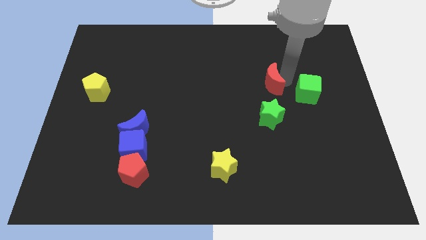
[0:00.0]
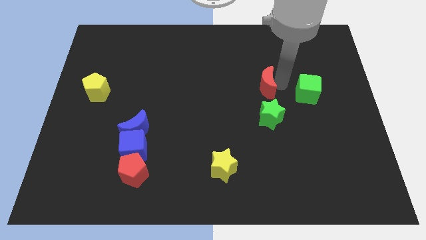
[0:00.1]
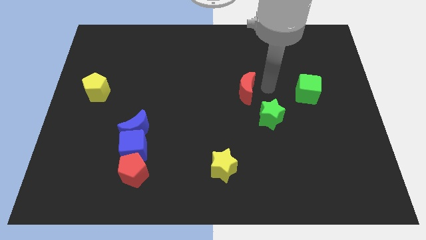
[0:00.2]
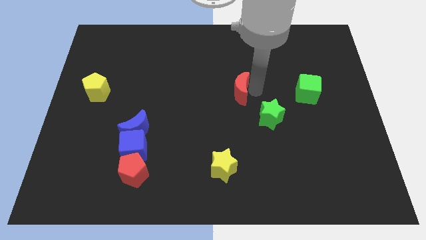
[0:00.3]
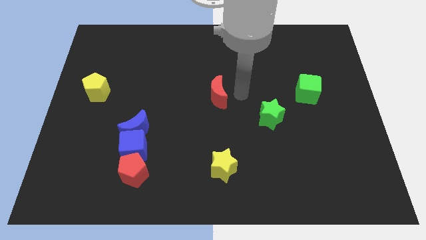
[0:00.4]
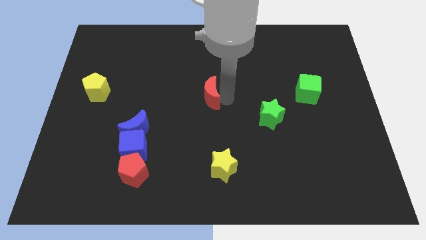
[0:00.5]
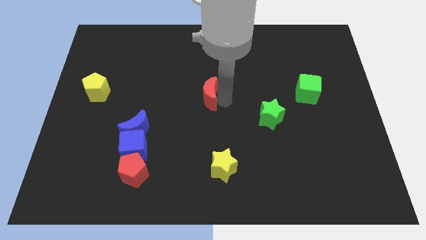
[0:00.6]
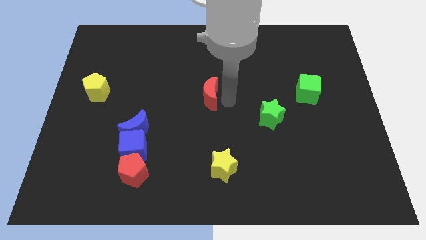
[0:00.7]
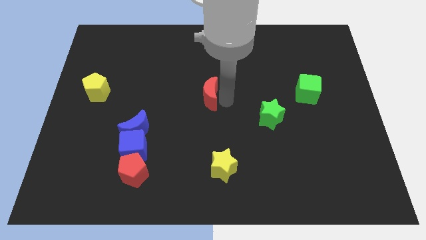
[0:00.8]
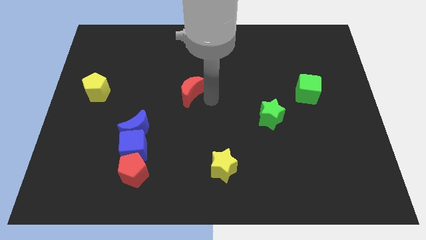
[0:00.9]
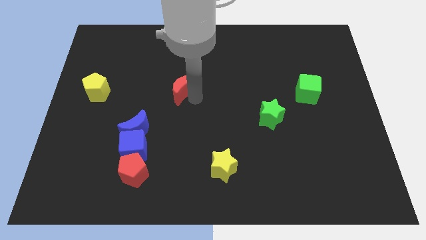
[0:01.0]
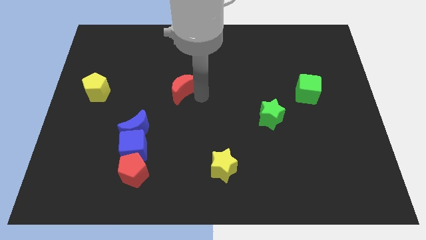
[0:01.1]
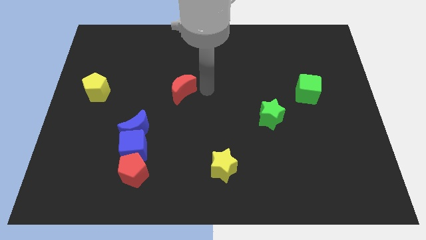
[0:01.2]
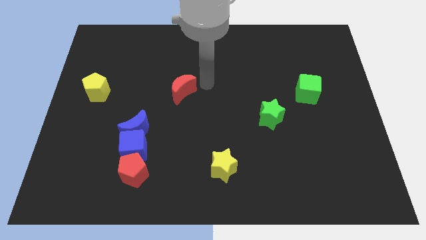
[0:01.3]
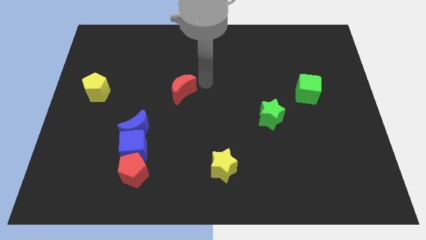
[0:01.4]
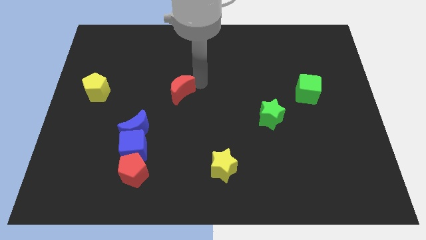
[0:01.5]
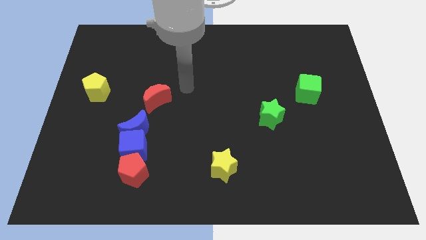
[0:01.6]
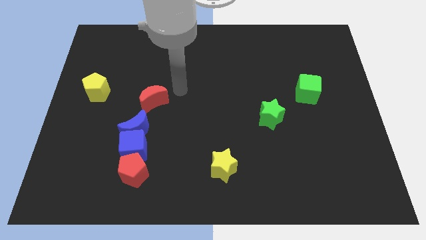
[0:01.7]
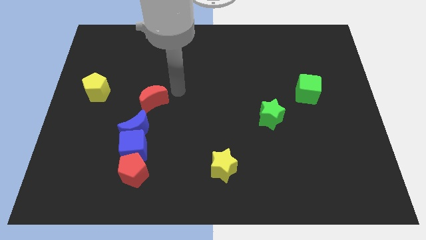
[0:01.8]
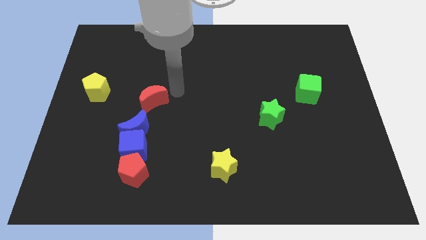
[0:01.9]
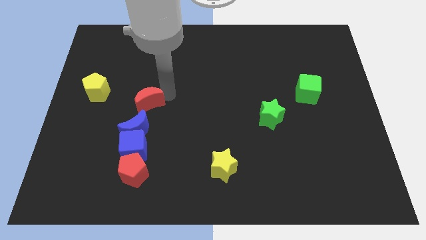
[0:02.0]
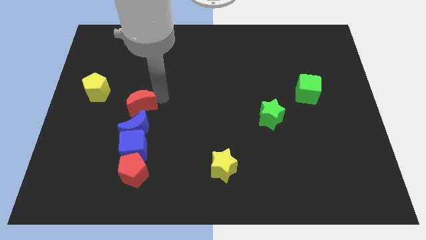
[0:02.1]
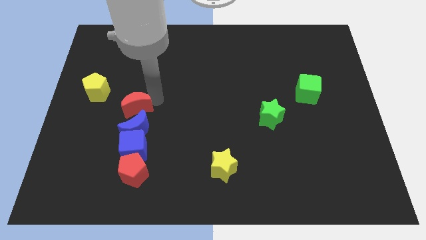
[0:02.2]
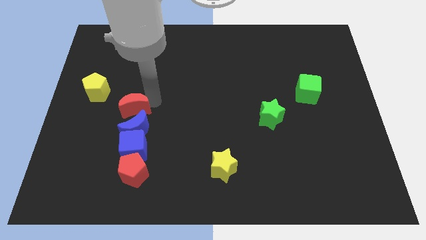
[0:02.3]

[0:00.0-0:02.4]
place the red crescent above the blue crescent

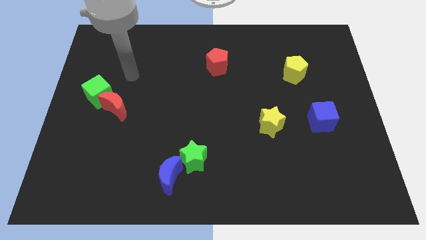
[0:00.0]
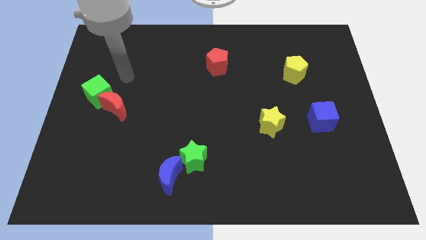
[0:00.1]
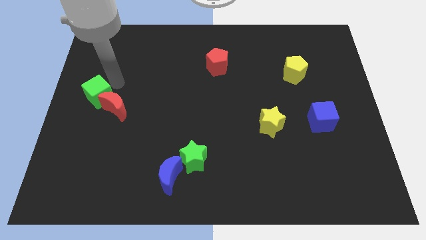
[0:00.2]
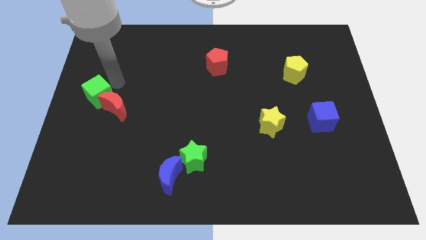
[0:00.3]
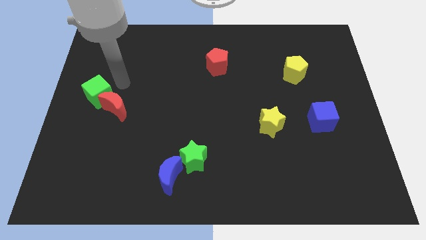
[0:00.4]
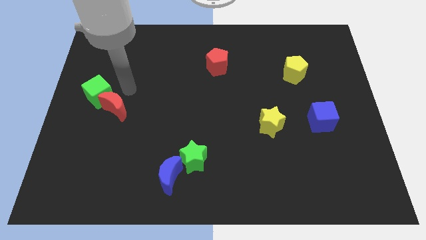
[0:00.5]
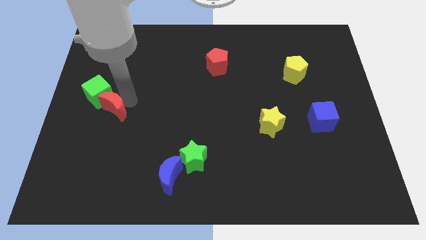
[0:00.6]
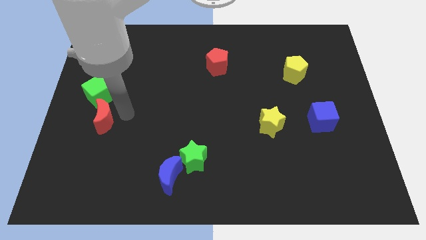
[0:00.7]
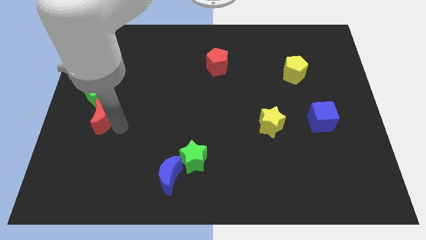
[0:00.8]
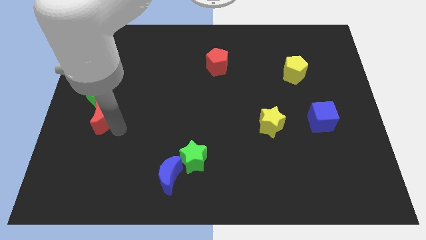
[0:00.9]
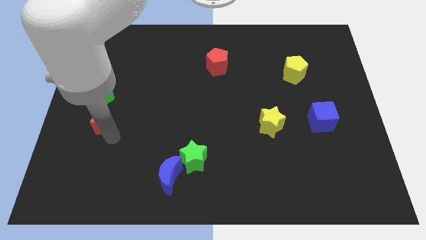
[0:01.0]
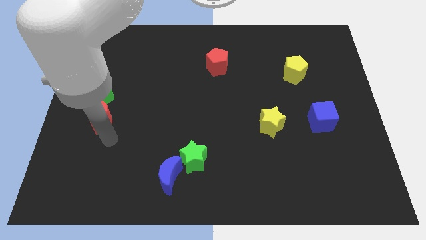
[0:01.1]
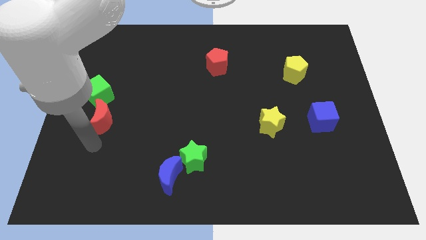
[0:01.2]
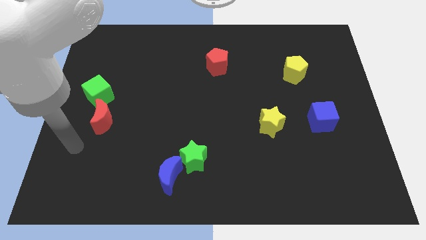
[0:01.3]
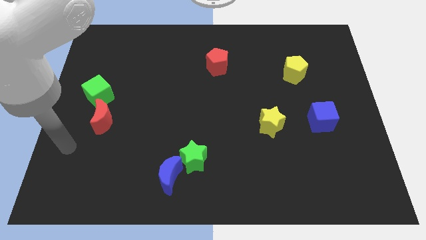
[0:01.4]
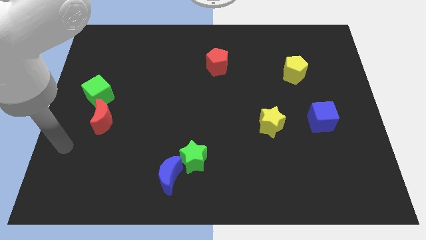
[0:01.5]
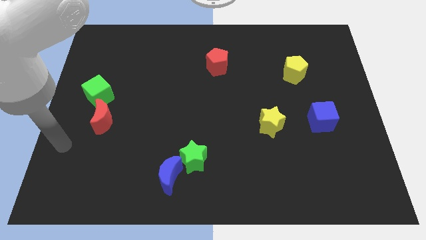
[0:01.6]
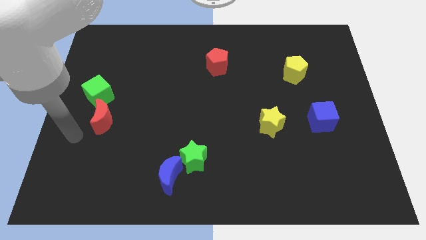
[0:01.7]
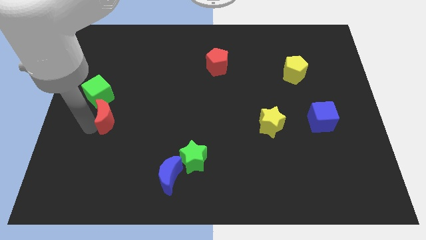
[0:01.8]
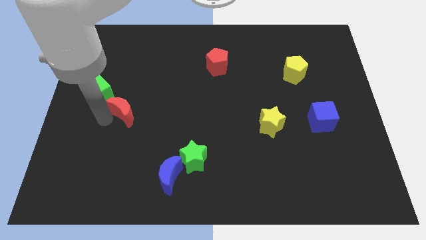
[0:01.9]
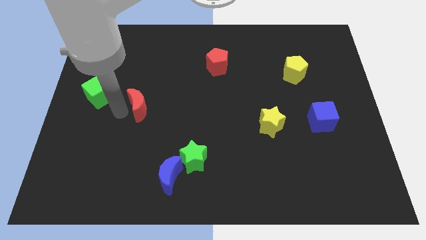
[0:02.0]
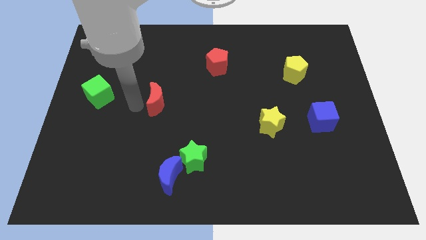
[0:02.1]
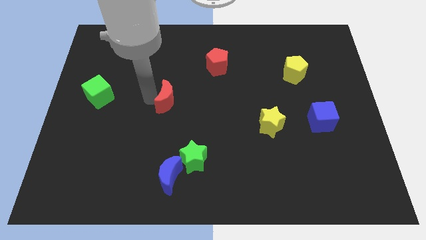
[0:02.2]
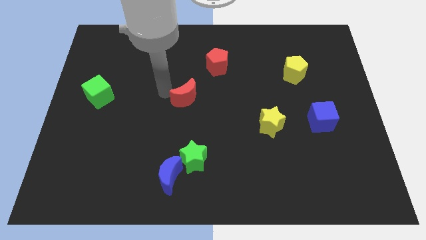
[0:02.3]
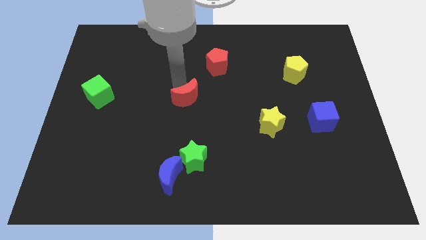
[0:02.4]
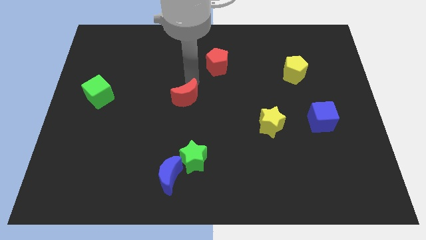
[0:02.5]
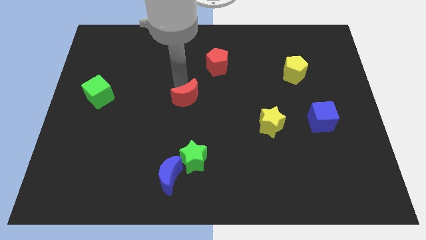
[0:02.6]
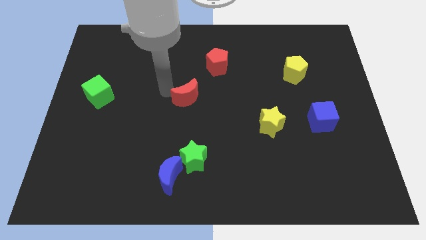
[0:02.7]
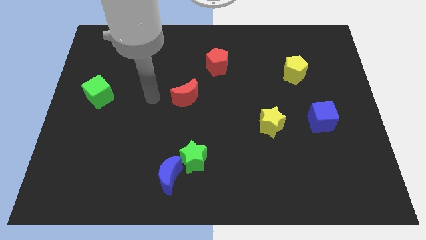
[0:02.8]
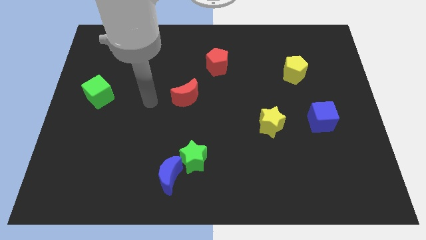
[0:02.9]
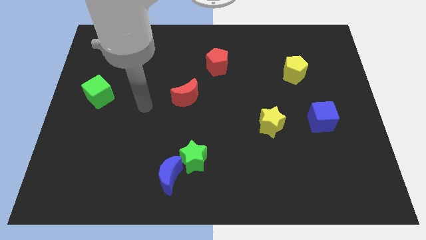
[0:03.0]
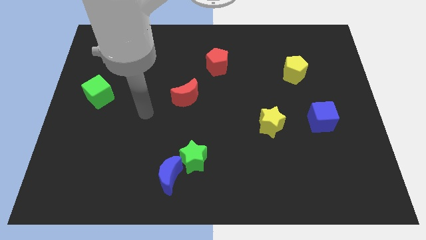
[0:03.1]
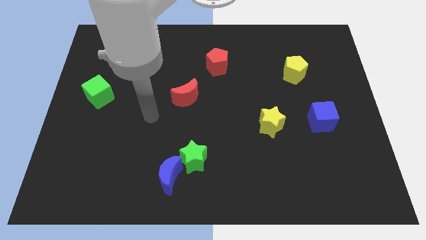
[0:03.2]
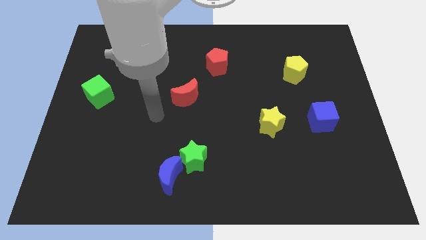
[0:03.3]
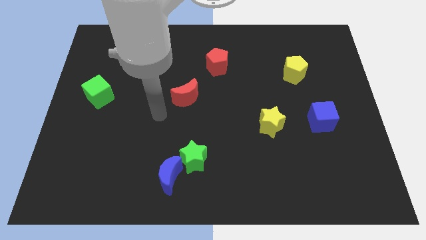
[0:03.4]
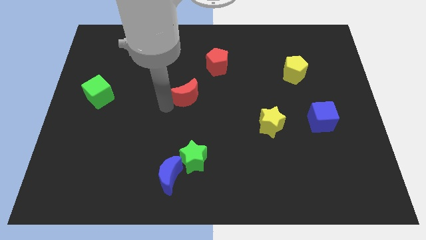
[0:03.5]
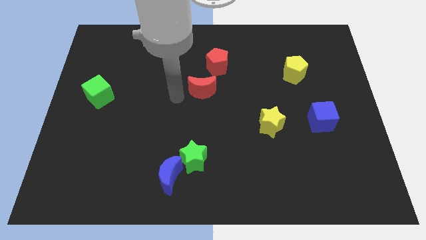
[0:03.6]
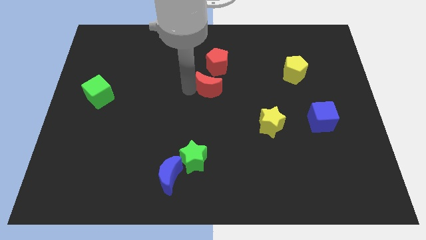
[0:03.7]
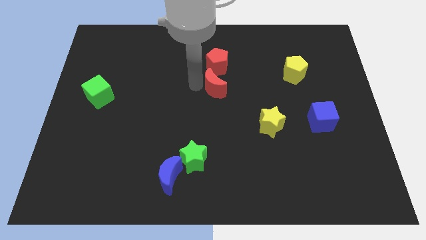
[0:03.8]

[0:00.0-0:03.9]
move the red moon to the bottom of red pentagon

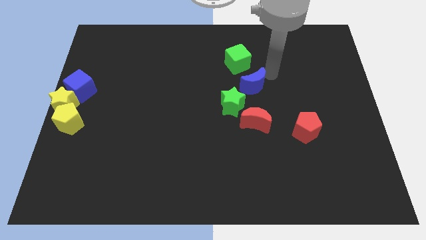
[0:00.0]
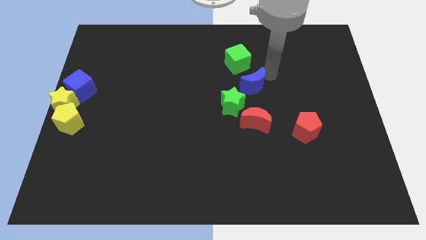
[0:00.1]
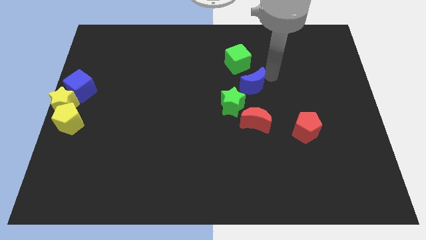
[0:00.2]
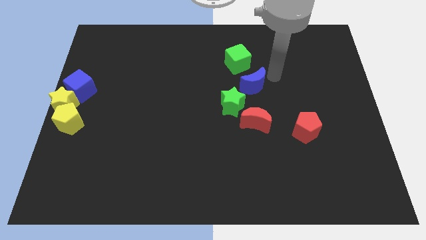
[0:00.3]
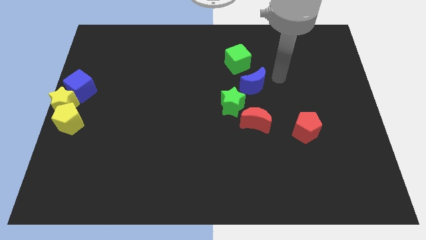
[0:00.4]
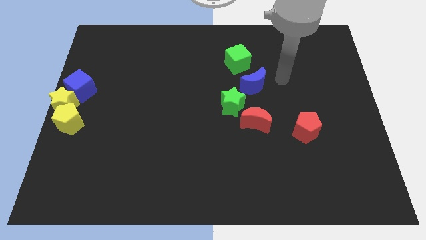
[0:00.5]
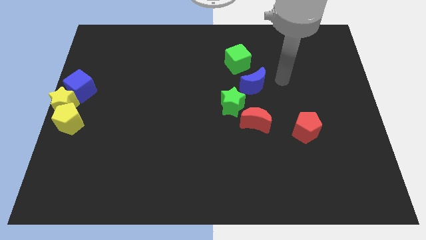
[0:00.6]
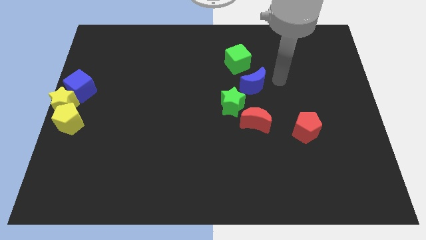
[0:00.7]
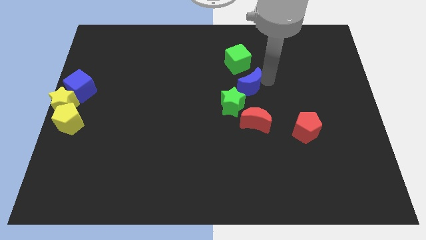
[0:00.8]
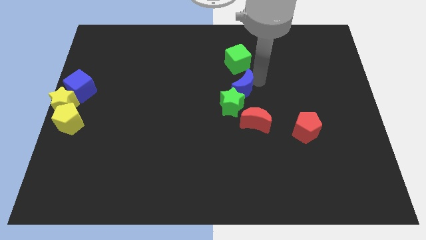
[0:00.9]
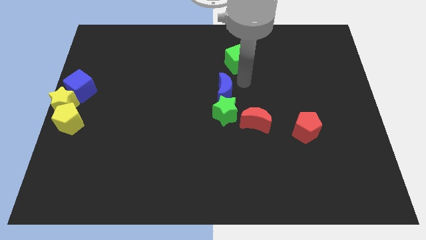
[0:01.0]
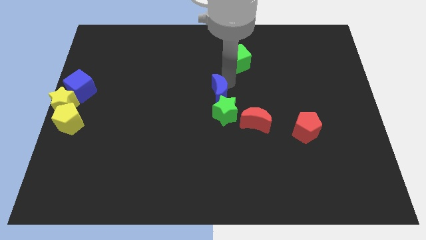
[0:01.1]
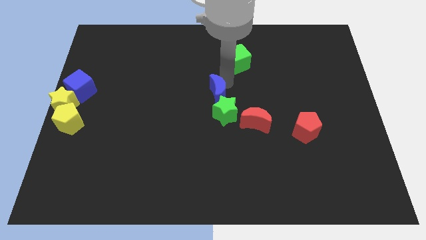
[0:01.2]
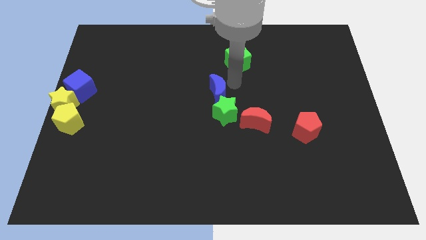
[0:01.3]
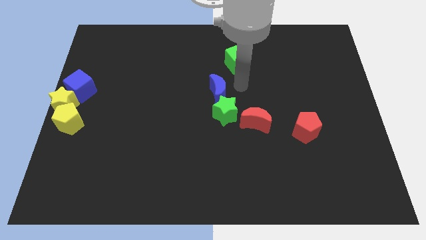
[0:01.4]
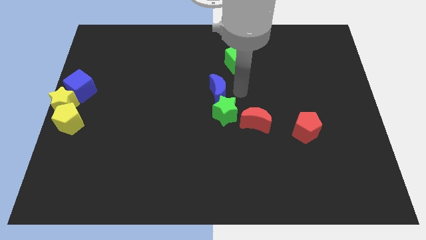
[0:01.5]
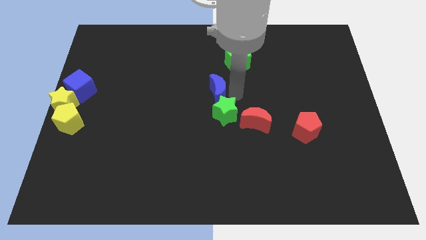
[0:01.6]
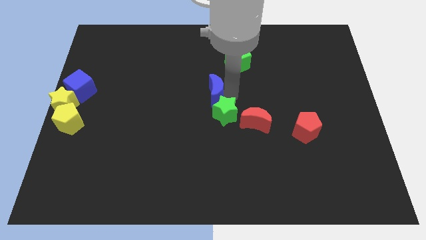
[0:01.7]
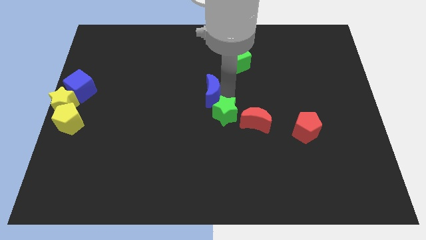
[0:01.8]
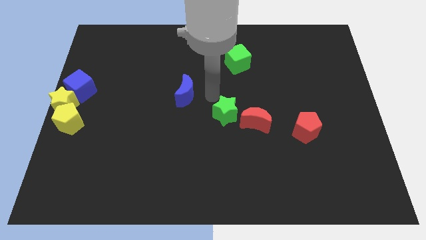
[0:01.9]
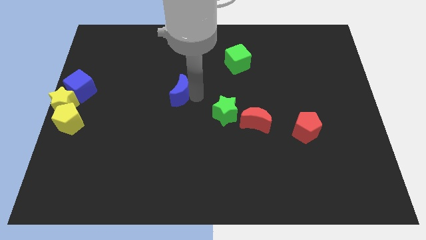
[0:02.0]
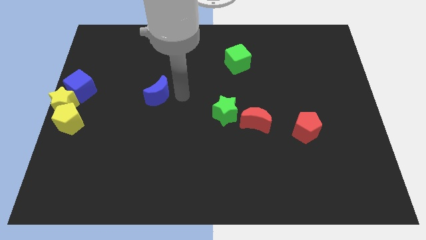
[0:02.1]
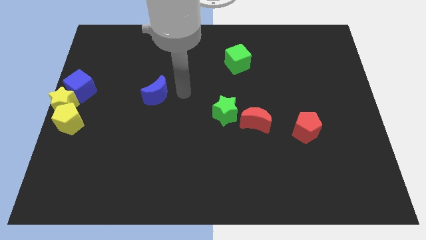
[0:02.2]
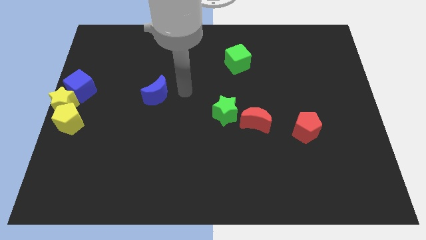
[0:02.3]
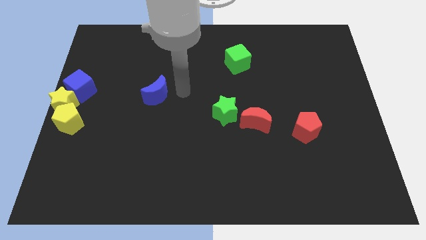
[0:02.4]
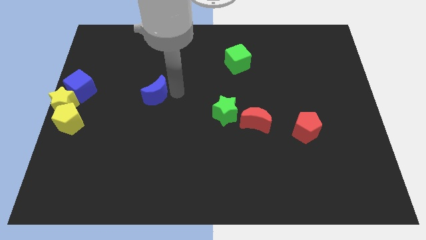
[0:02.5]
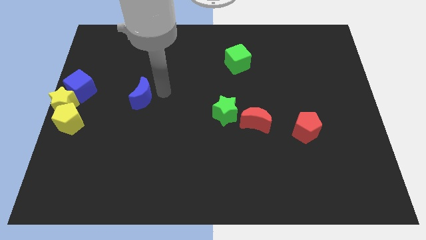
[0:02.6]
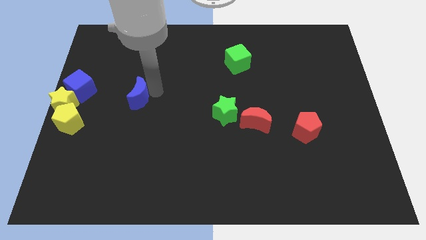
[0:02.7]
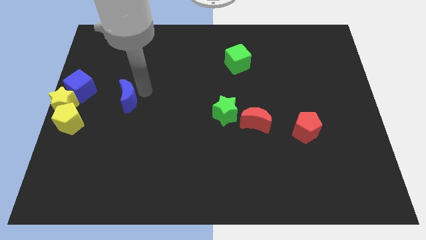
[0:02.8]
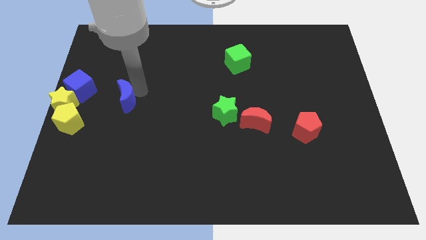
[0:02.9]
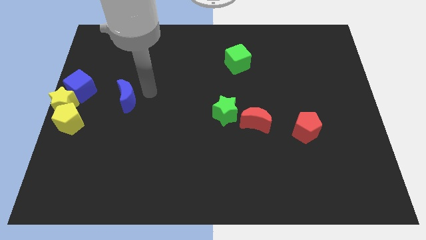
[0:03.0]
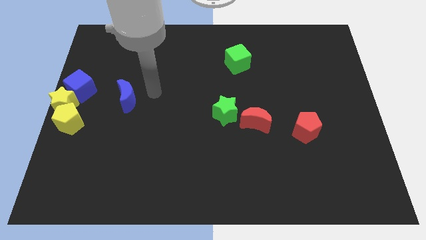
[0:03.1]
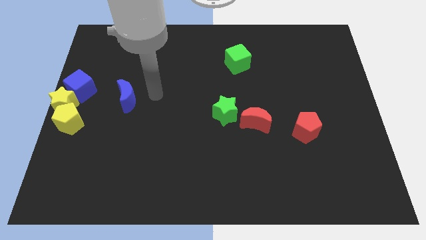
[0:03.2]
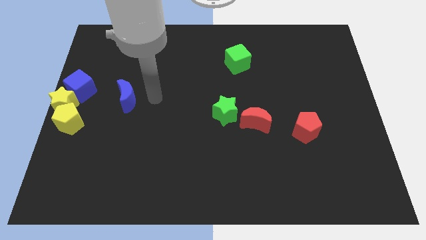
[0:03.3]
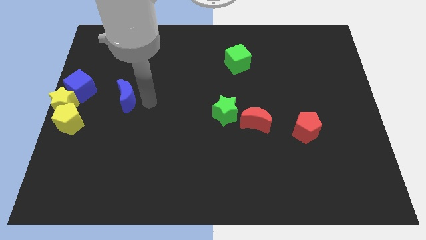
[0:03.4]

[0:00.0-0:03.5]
place the blue moon right to the blue cube
